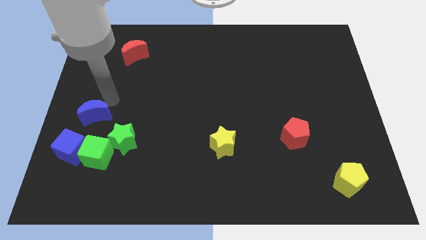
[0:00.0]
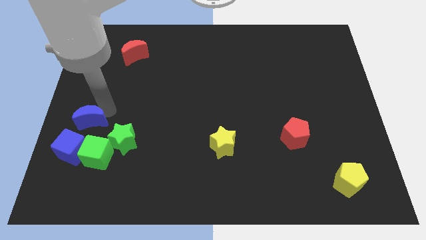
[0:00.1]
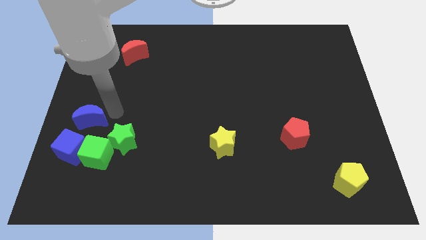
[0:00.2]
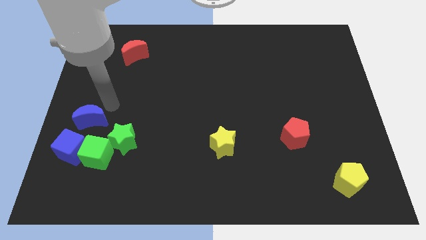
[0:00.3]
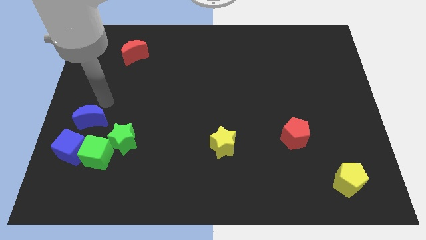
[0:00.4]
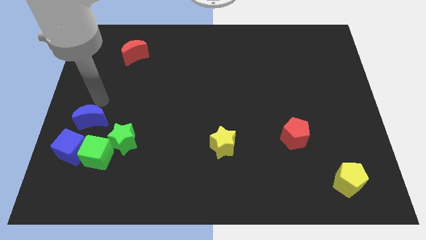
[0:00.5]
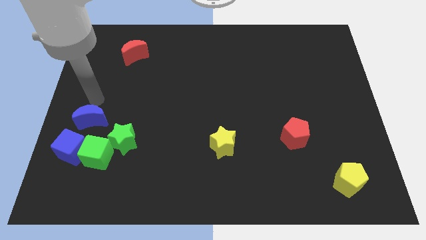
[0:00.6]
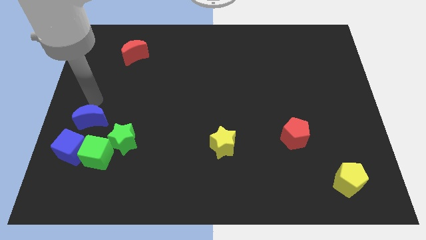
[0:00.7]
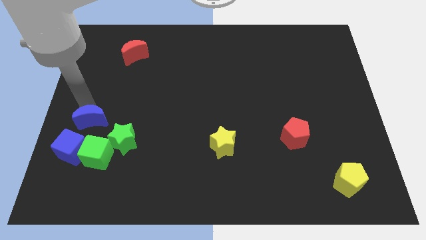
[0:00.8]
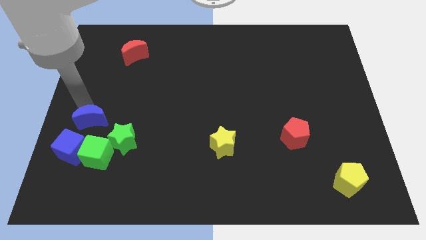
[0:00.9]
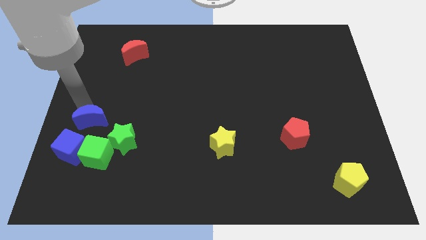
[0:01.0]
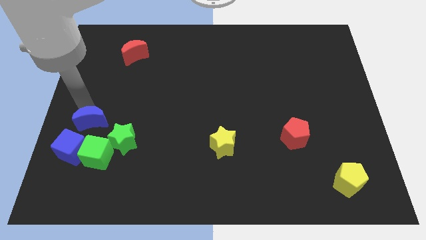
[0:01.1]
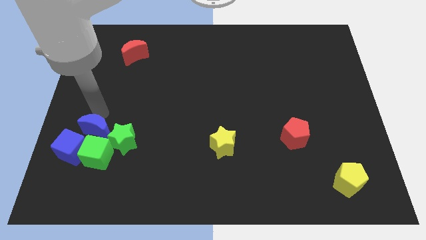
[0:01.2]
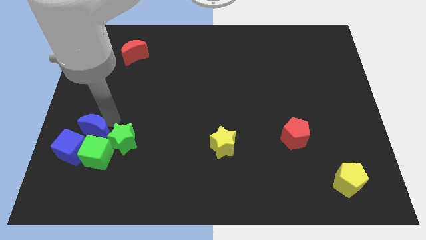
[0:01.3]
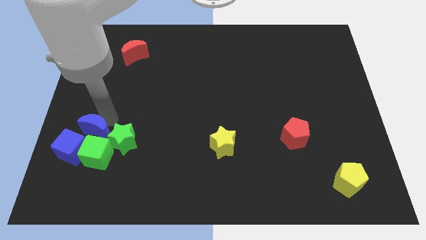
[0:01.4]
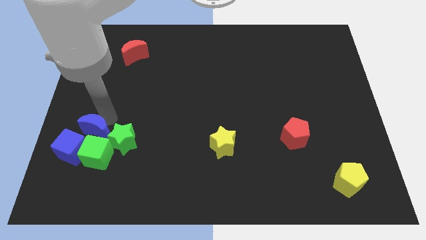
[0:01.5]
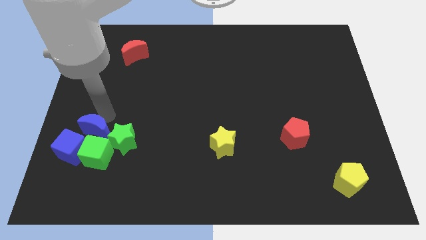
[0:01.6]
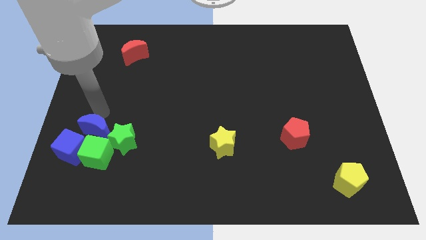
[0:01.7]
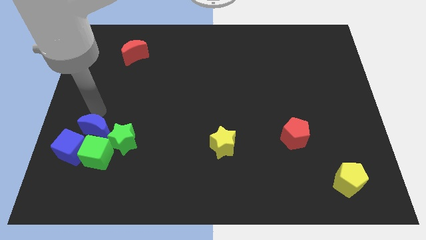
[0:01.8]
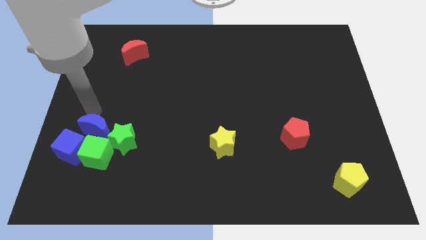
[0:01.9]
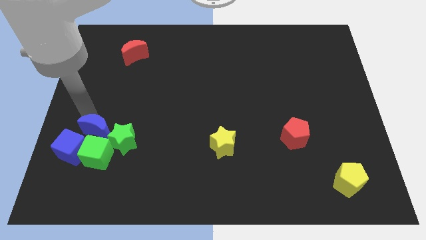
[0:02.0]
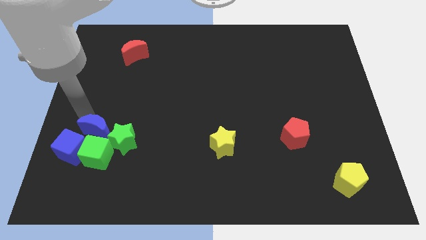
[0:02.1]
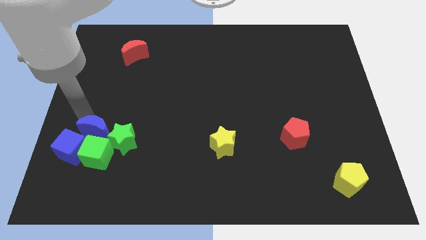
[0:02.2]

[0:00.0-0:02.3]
move the blue moon near to the green cube

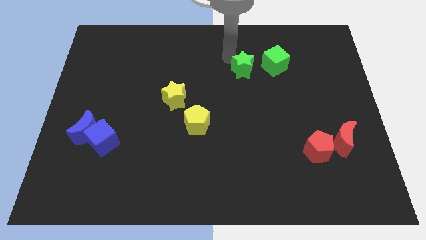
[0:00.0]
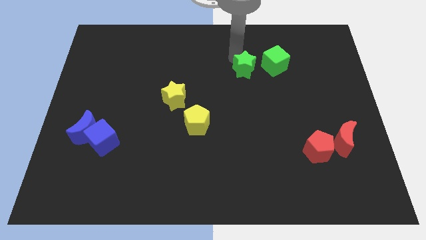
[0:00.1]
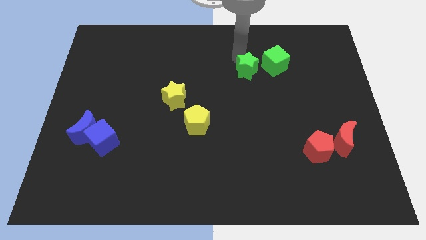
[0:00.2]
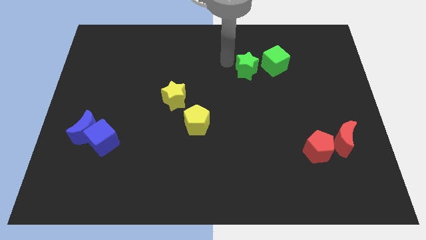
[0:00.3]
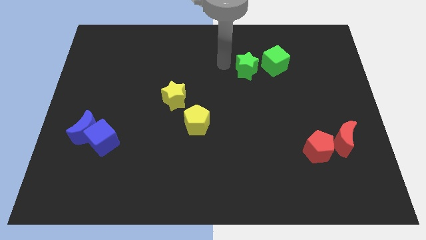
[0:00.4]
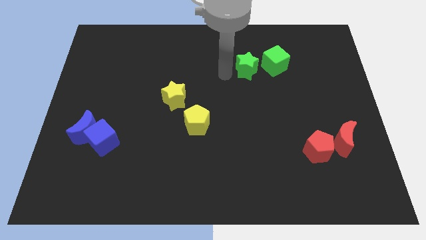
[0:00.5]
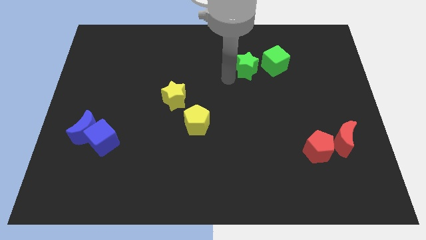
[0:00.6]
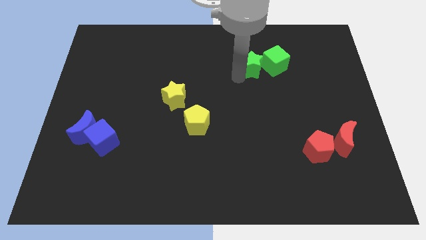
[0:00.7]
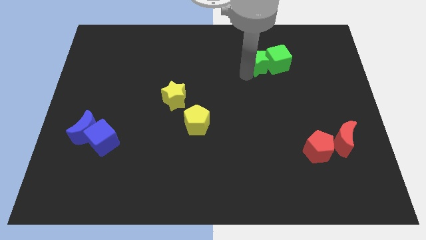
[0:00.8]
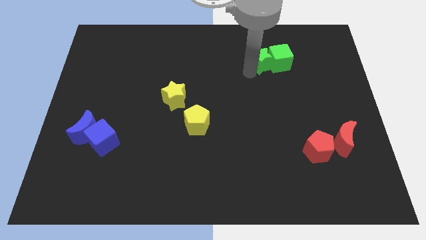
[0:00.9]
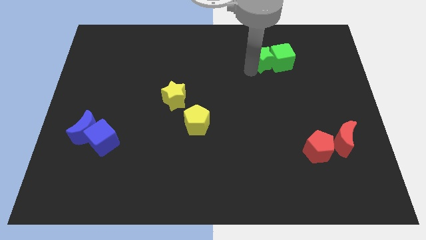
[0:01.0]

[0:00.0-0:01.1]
push the green star closer to the left of the green cube

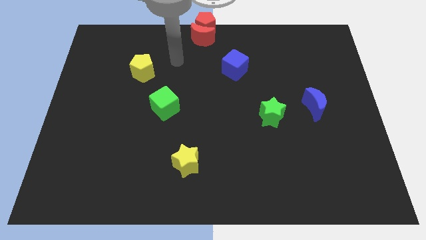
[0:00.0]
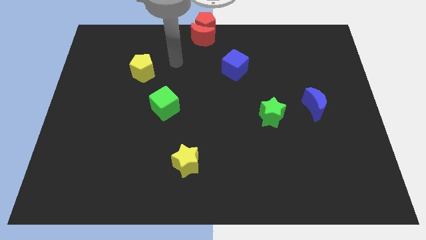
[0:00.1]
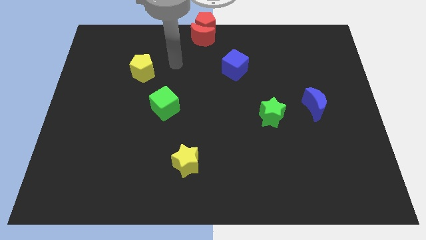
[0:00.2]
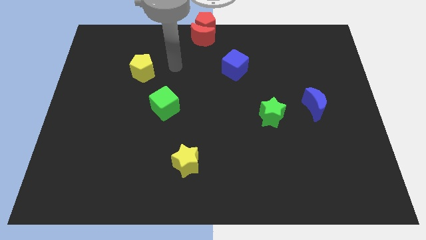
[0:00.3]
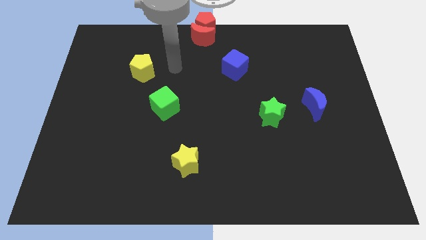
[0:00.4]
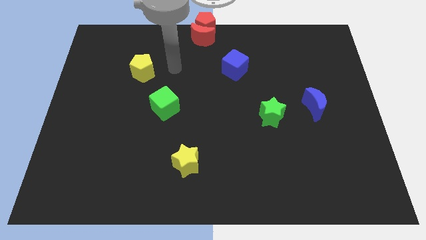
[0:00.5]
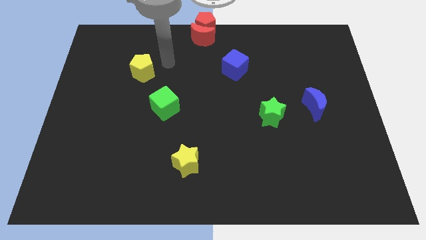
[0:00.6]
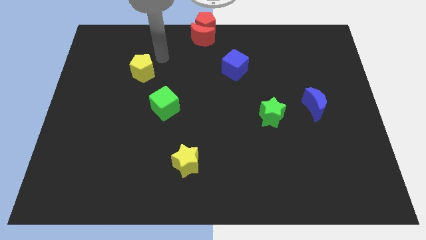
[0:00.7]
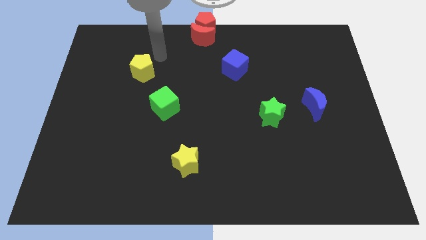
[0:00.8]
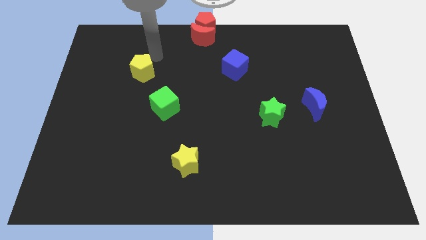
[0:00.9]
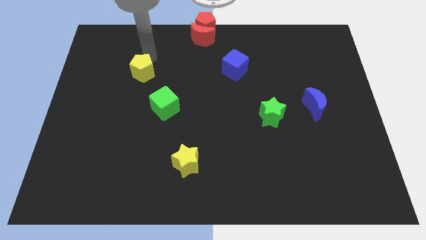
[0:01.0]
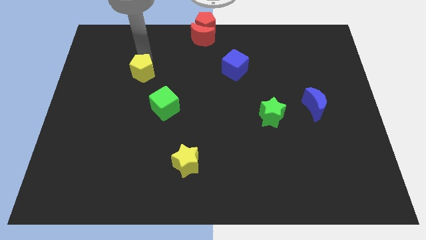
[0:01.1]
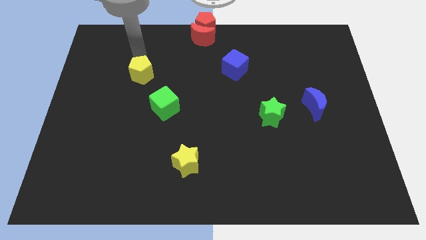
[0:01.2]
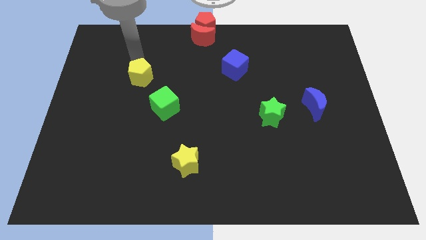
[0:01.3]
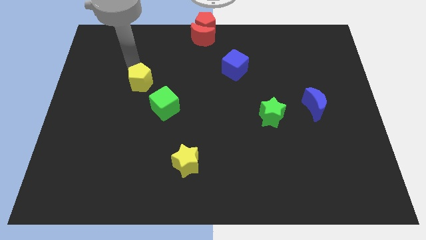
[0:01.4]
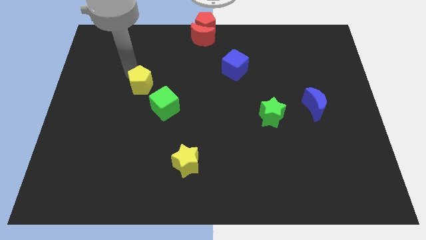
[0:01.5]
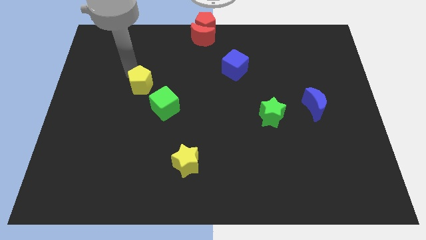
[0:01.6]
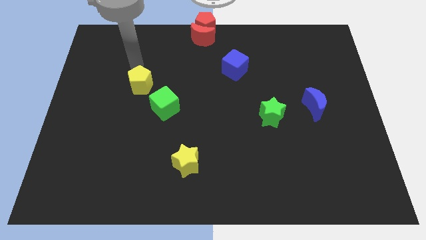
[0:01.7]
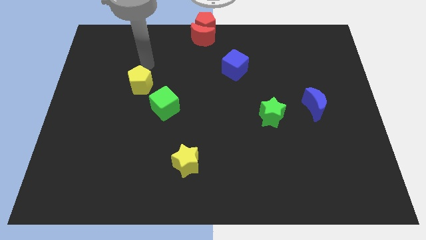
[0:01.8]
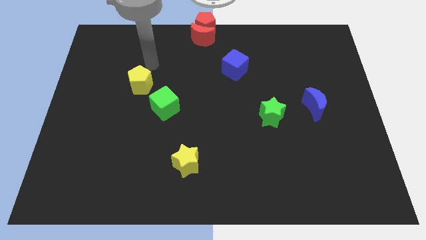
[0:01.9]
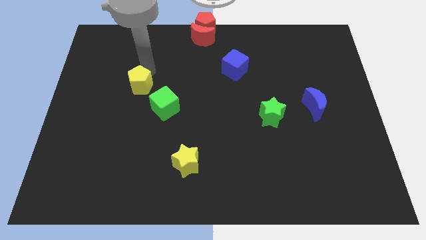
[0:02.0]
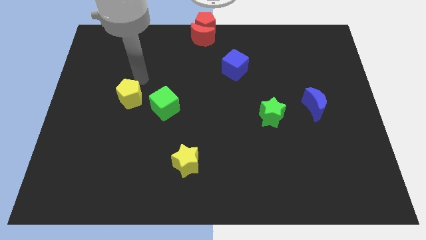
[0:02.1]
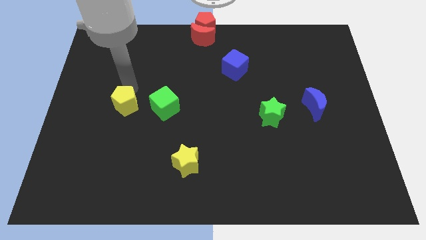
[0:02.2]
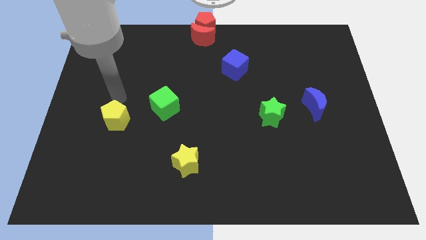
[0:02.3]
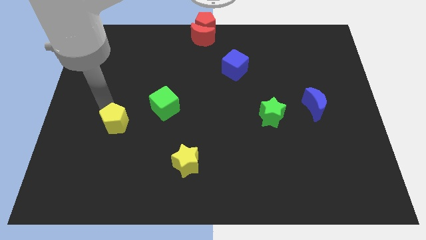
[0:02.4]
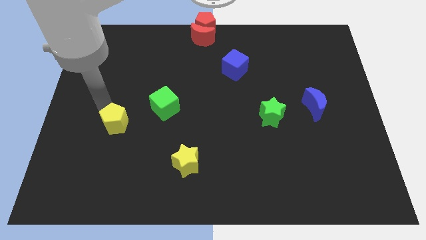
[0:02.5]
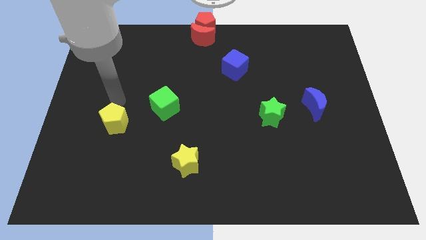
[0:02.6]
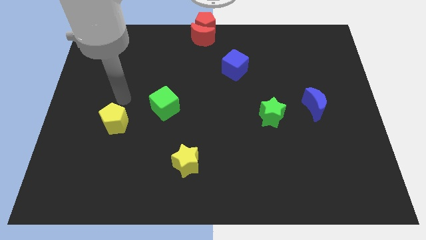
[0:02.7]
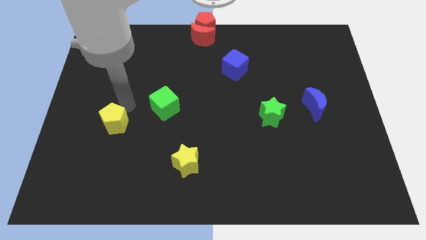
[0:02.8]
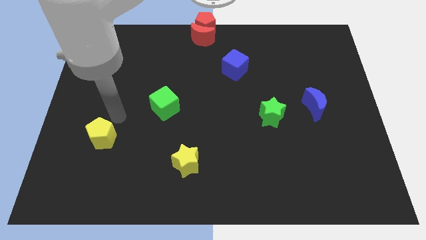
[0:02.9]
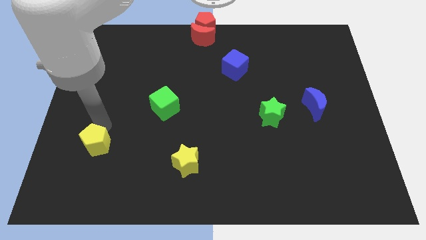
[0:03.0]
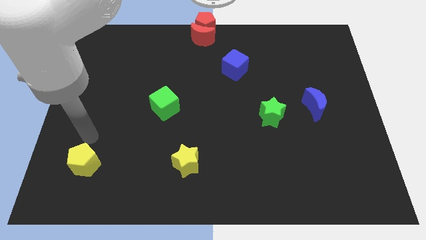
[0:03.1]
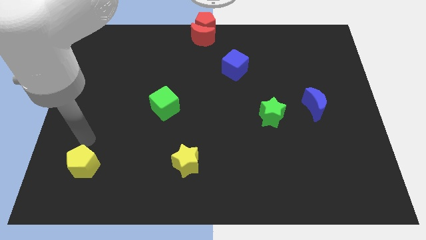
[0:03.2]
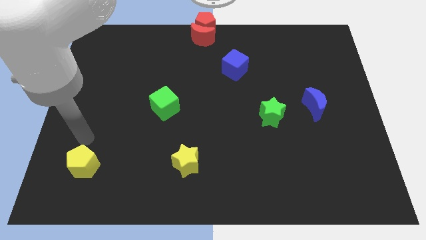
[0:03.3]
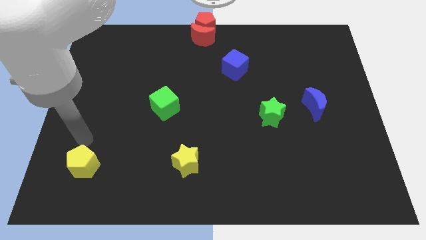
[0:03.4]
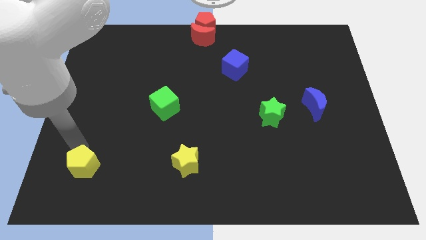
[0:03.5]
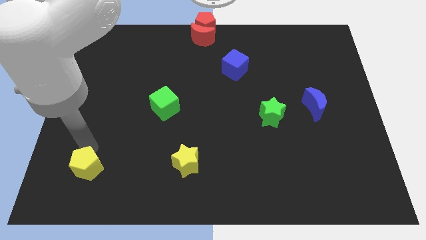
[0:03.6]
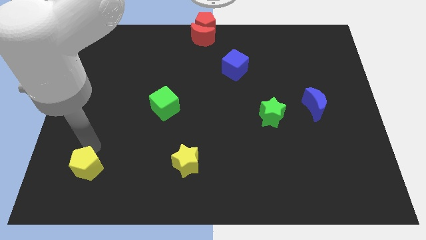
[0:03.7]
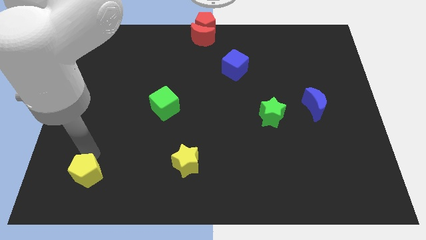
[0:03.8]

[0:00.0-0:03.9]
move the yellow pentagon towards the bottom left

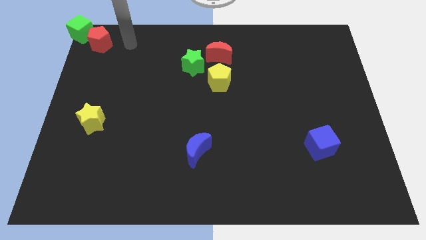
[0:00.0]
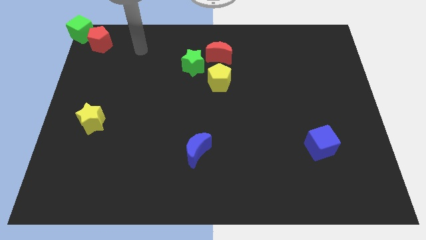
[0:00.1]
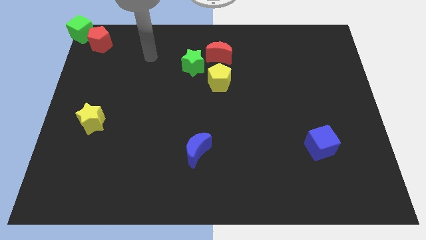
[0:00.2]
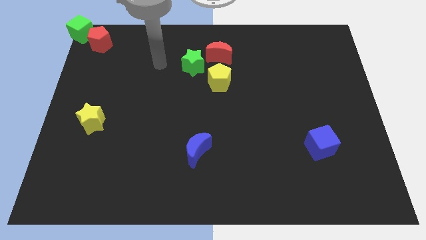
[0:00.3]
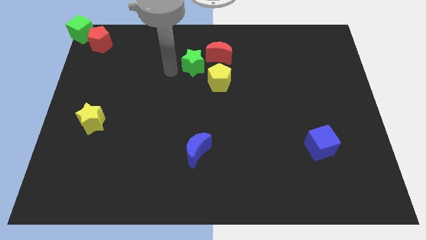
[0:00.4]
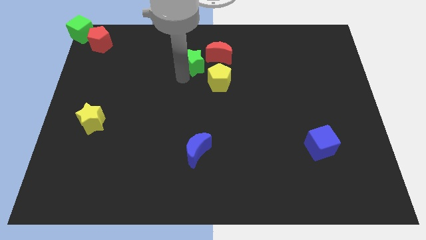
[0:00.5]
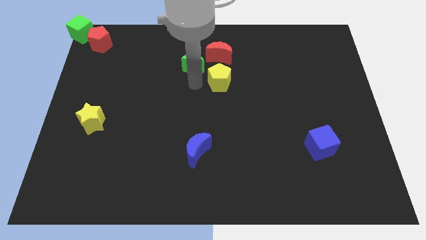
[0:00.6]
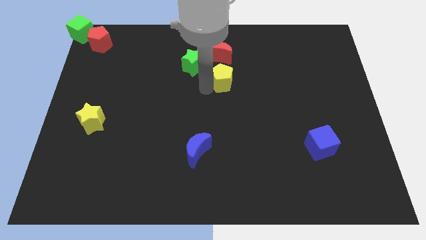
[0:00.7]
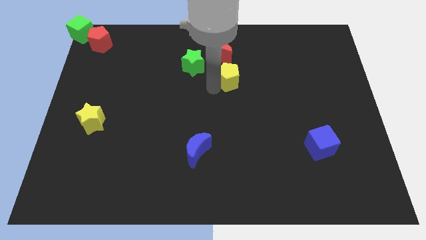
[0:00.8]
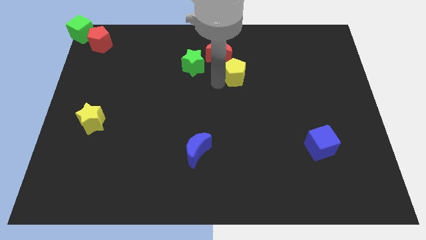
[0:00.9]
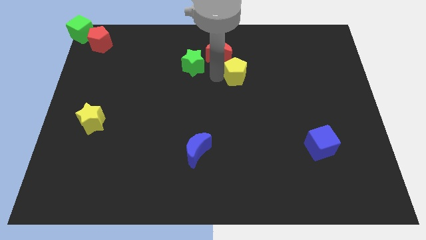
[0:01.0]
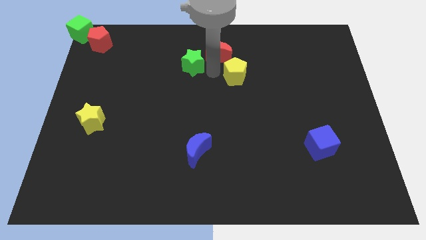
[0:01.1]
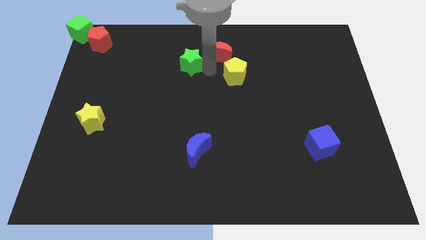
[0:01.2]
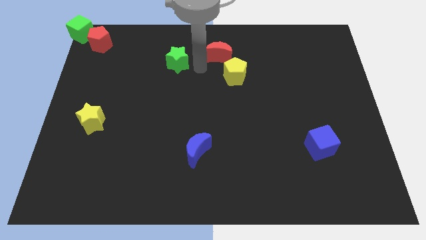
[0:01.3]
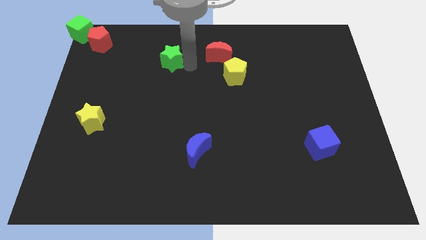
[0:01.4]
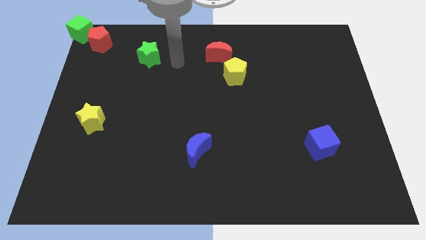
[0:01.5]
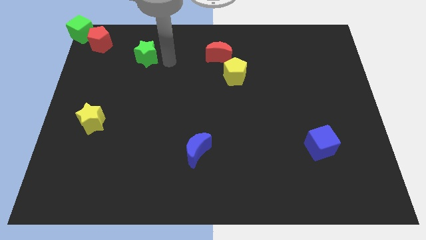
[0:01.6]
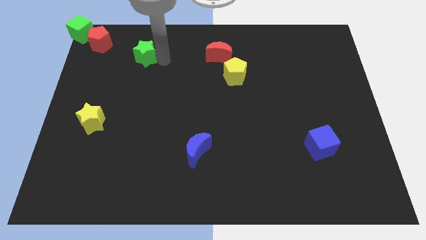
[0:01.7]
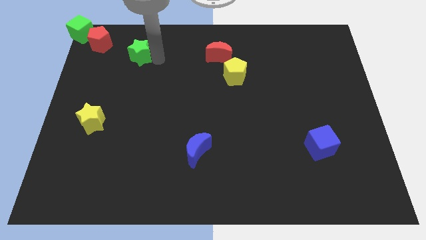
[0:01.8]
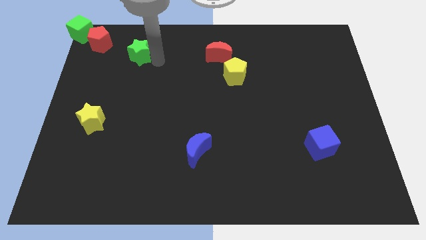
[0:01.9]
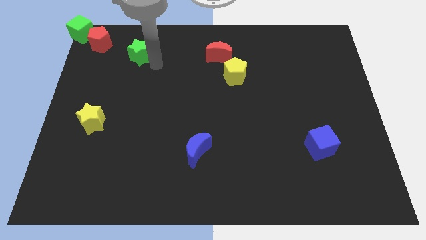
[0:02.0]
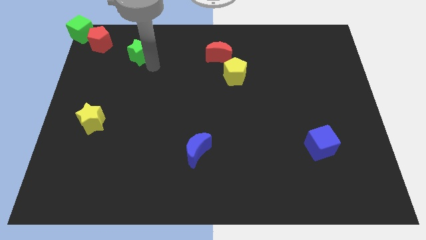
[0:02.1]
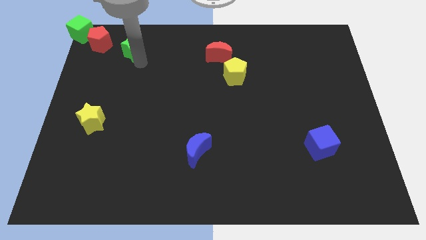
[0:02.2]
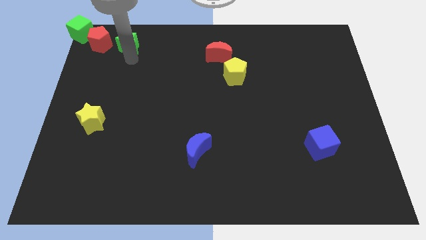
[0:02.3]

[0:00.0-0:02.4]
move the green star diagonally right of the red pentagon
